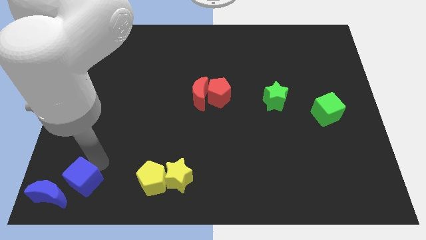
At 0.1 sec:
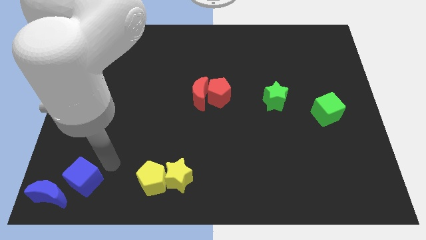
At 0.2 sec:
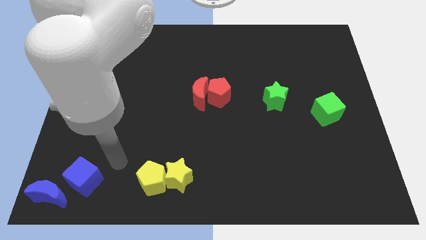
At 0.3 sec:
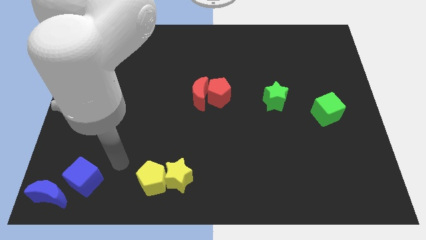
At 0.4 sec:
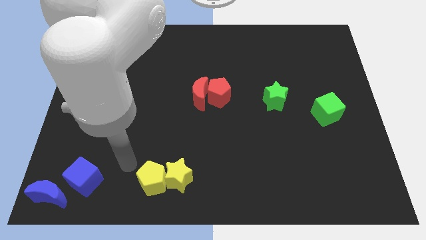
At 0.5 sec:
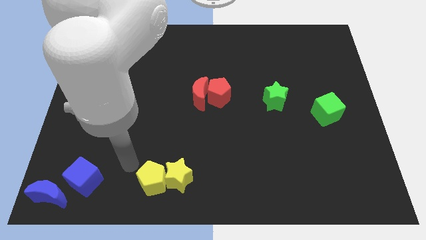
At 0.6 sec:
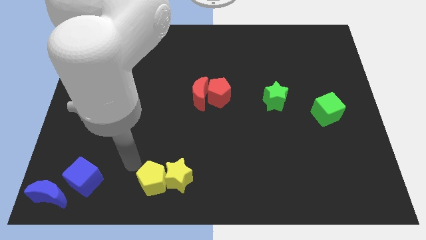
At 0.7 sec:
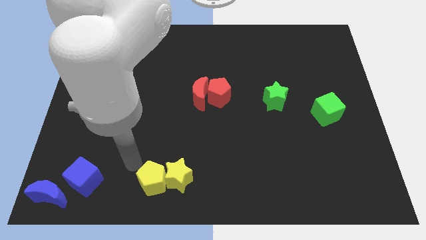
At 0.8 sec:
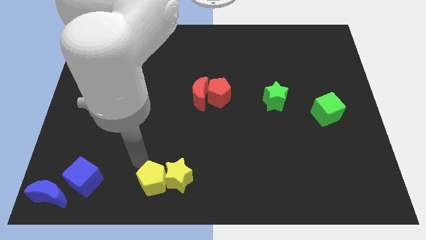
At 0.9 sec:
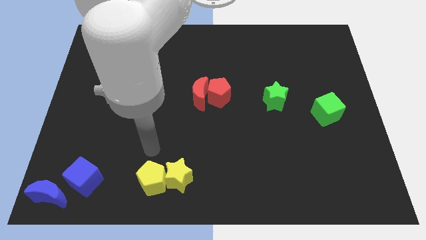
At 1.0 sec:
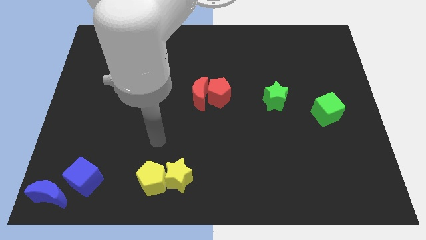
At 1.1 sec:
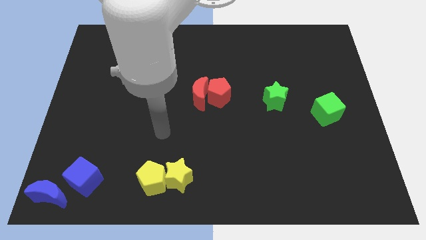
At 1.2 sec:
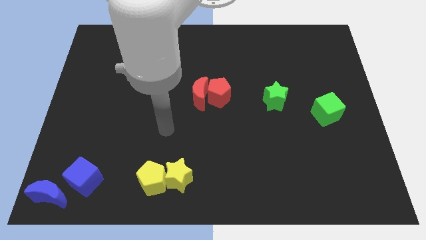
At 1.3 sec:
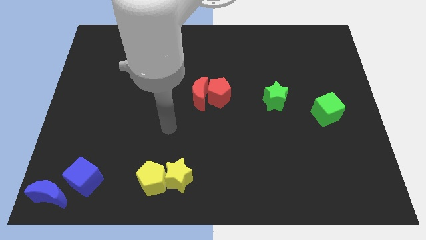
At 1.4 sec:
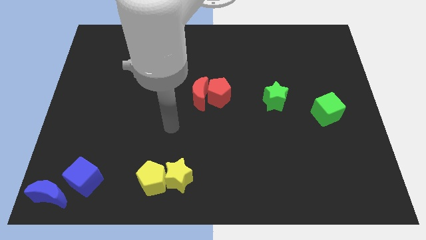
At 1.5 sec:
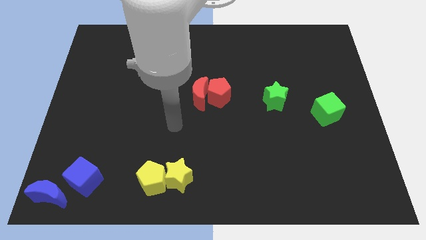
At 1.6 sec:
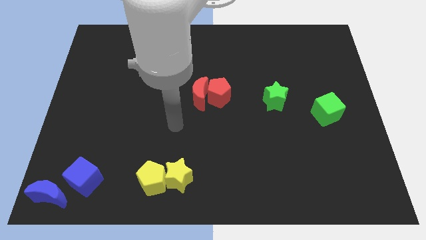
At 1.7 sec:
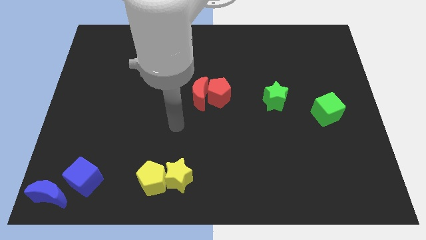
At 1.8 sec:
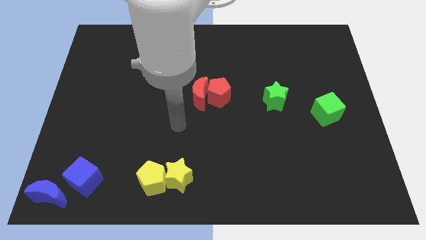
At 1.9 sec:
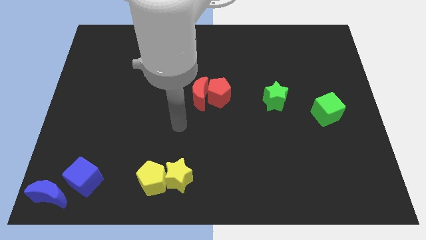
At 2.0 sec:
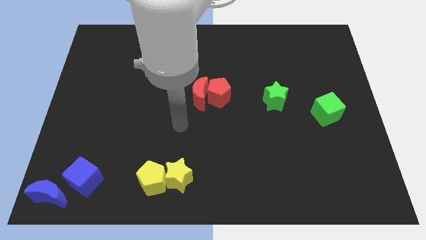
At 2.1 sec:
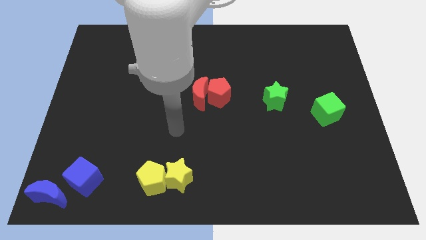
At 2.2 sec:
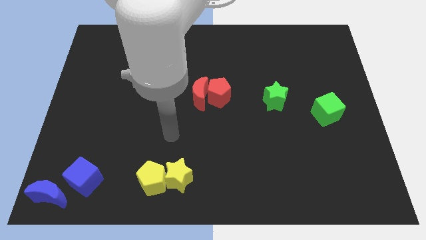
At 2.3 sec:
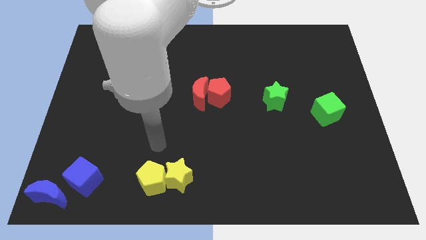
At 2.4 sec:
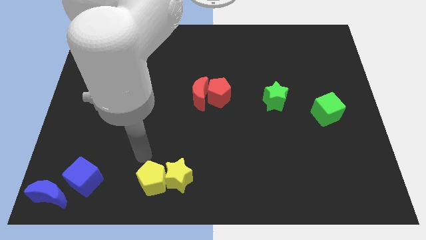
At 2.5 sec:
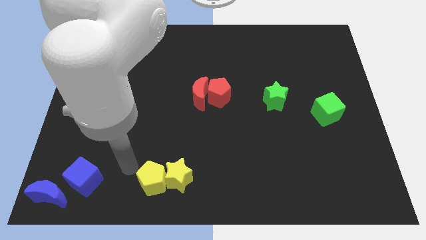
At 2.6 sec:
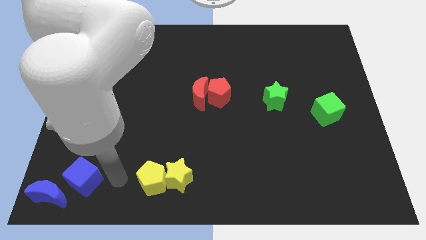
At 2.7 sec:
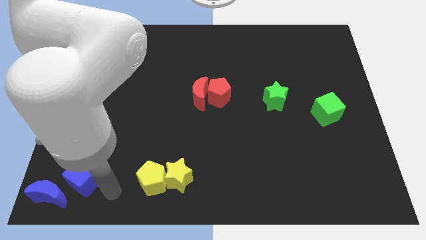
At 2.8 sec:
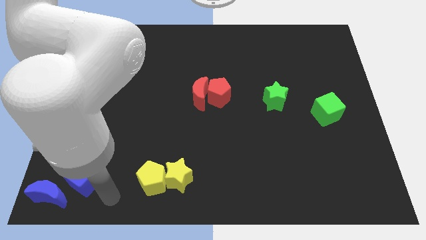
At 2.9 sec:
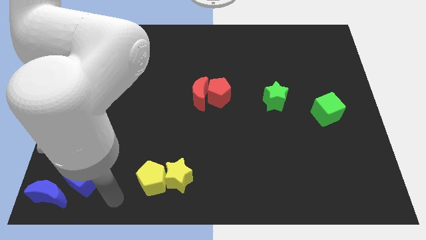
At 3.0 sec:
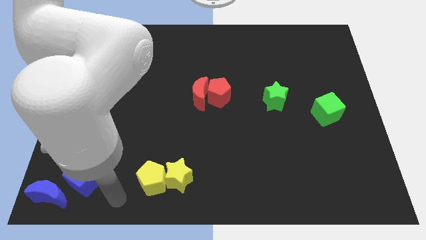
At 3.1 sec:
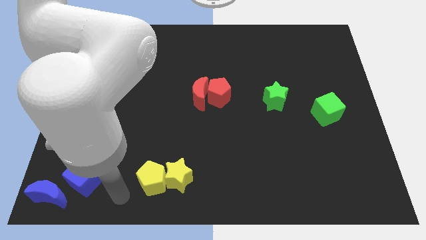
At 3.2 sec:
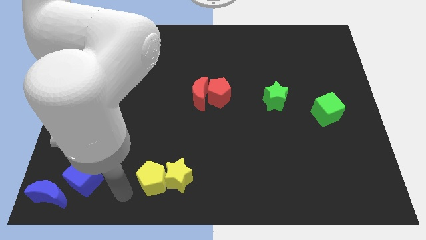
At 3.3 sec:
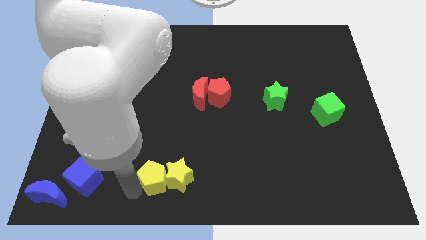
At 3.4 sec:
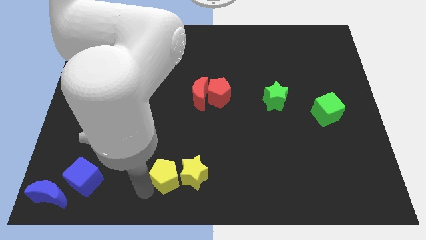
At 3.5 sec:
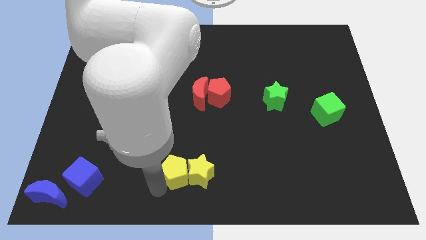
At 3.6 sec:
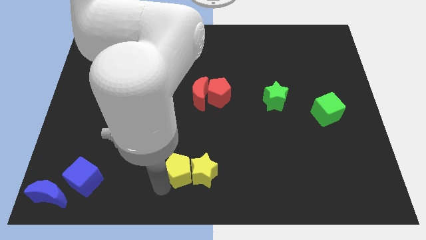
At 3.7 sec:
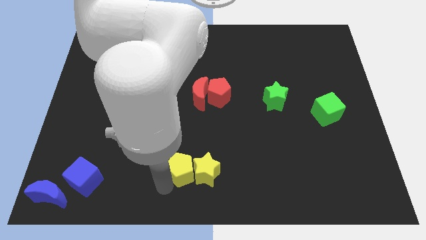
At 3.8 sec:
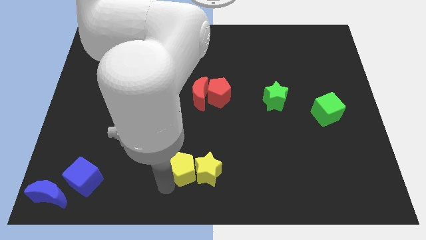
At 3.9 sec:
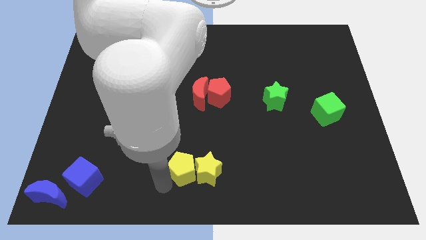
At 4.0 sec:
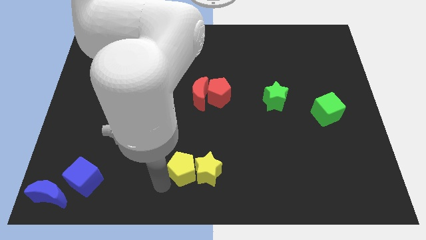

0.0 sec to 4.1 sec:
move yellow pentagon towards right along with yellow star

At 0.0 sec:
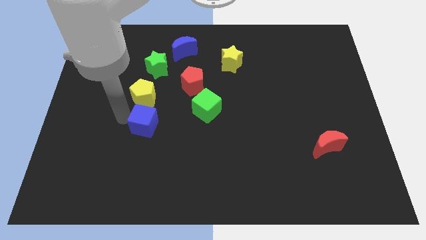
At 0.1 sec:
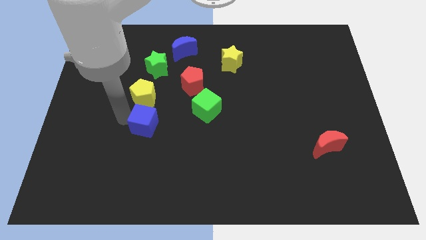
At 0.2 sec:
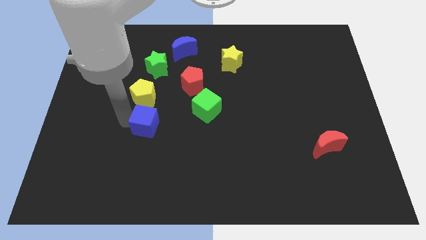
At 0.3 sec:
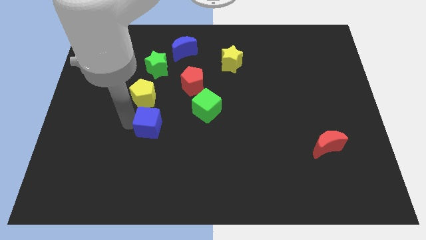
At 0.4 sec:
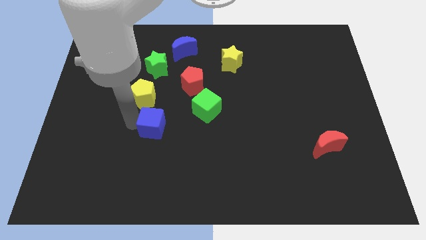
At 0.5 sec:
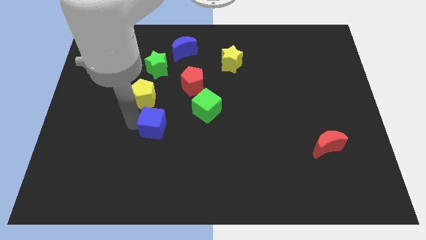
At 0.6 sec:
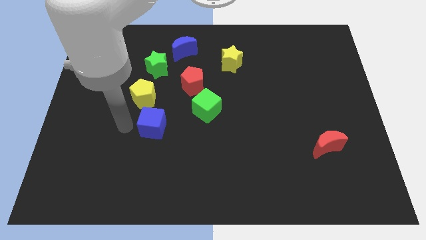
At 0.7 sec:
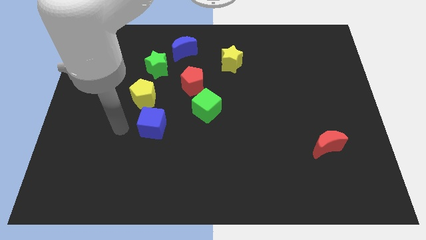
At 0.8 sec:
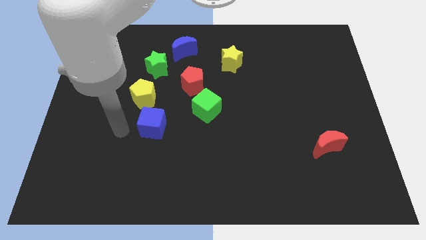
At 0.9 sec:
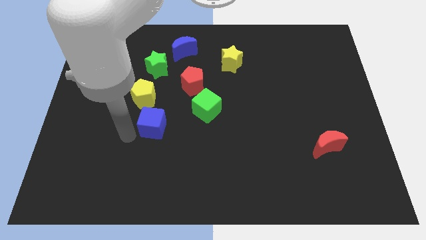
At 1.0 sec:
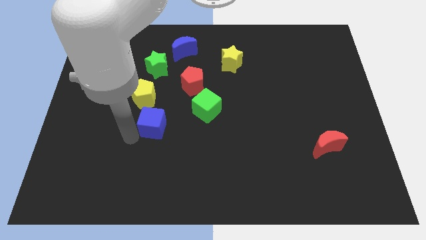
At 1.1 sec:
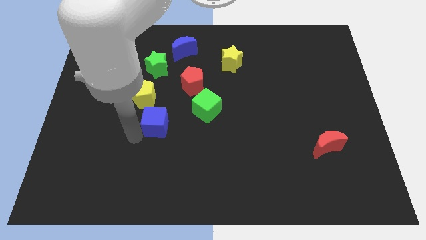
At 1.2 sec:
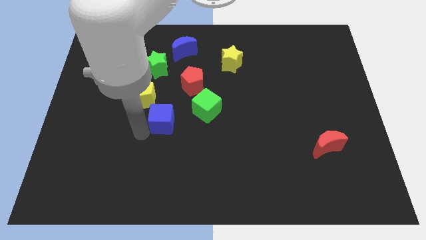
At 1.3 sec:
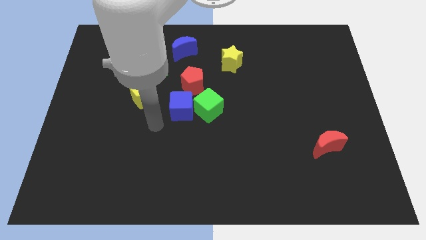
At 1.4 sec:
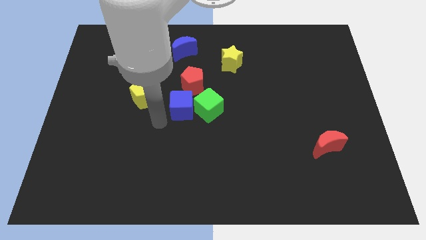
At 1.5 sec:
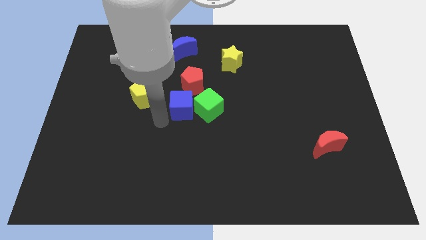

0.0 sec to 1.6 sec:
place the blue cube left to the green cube

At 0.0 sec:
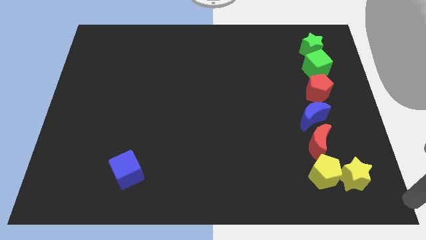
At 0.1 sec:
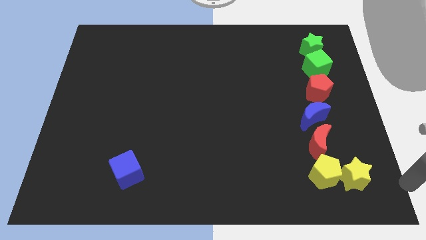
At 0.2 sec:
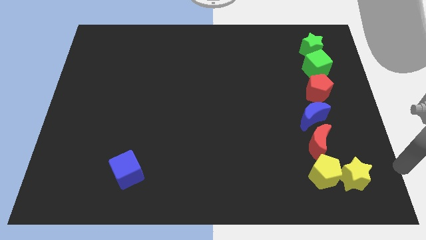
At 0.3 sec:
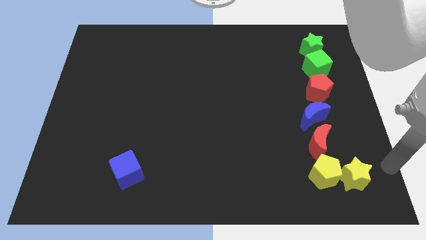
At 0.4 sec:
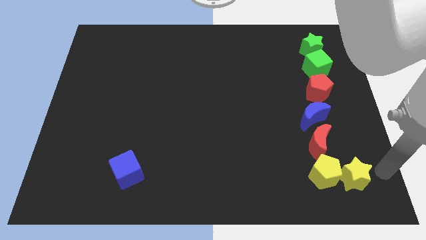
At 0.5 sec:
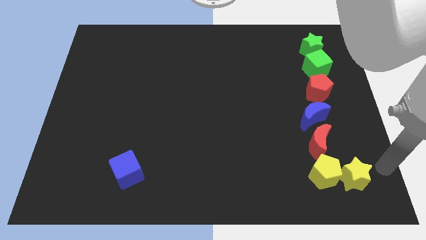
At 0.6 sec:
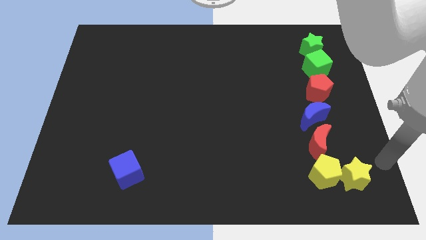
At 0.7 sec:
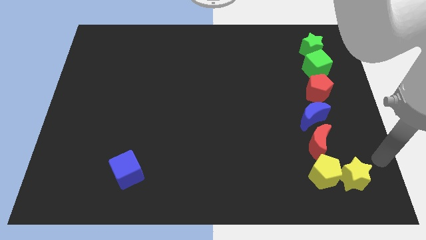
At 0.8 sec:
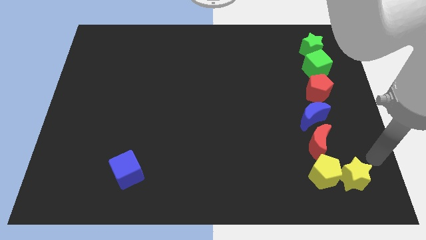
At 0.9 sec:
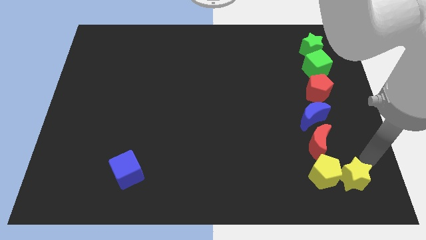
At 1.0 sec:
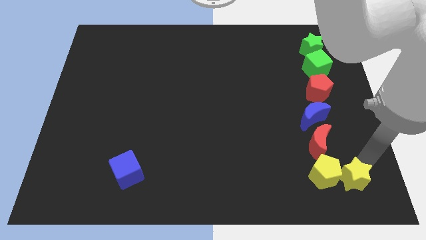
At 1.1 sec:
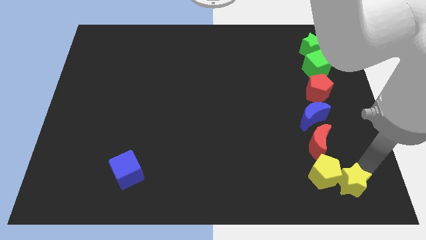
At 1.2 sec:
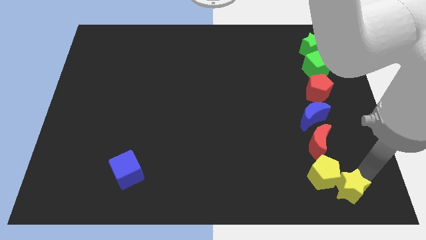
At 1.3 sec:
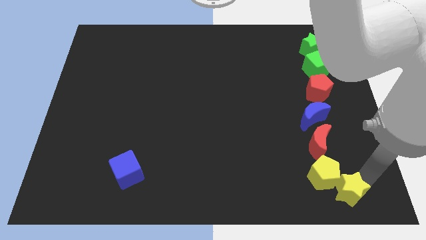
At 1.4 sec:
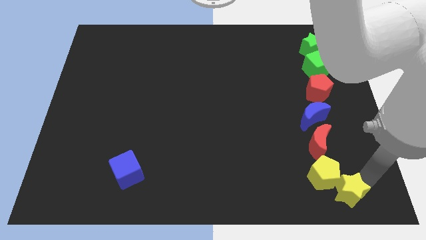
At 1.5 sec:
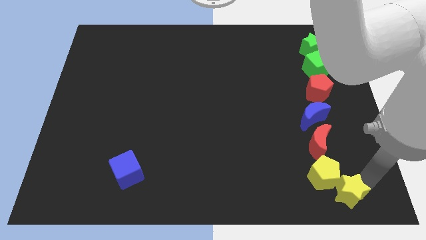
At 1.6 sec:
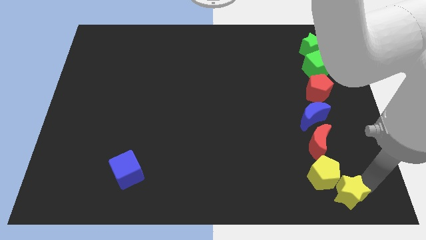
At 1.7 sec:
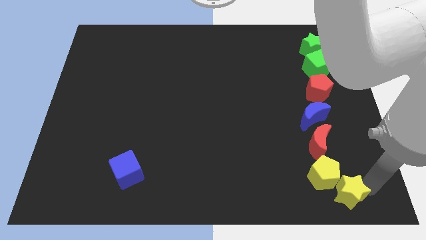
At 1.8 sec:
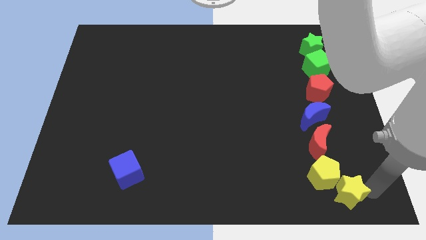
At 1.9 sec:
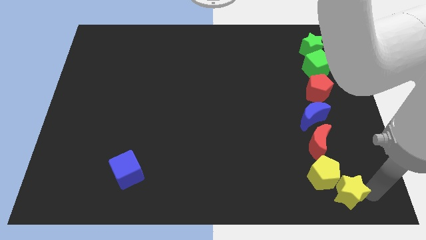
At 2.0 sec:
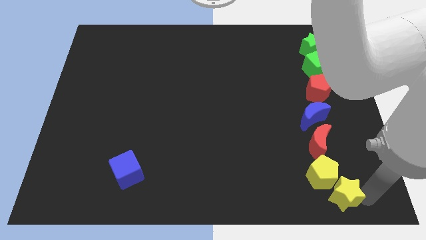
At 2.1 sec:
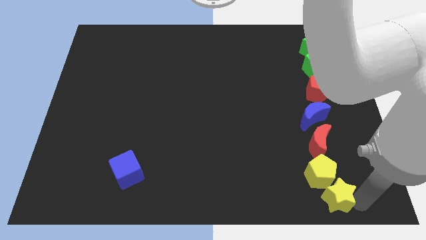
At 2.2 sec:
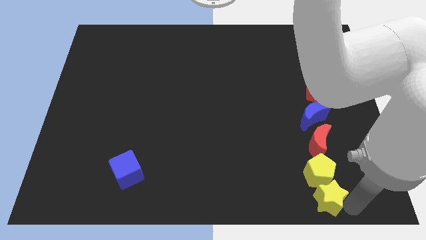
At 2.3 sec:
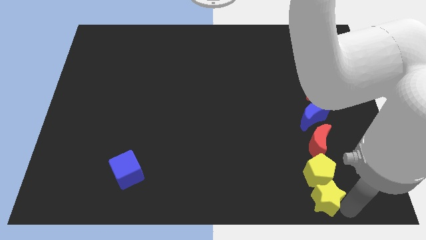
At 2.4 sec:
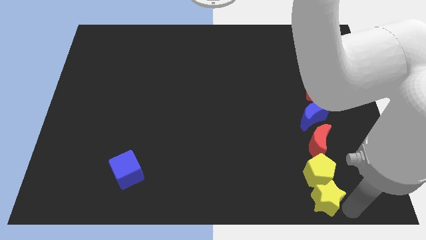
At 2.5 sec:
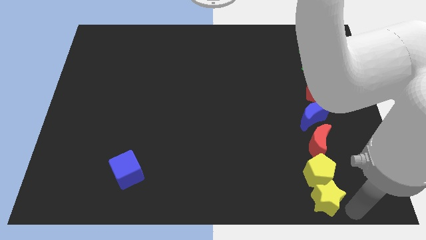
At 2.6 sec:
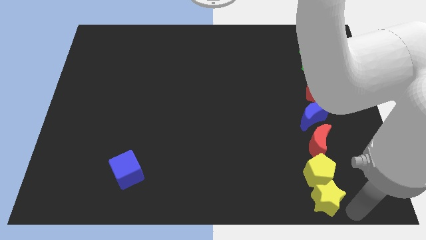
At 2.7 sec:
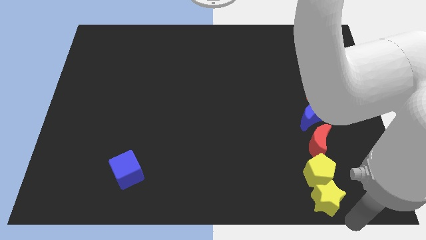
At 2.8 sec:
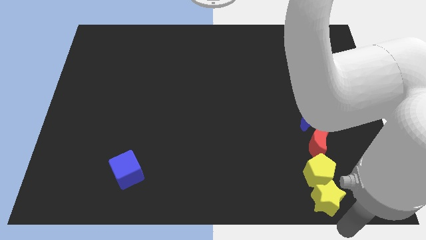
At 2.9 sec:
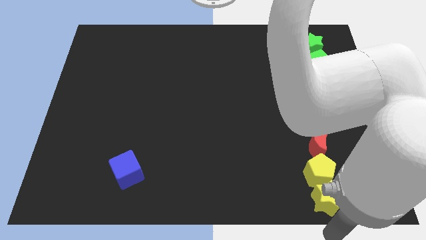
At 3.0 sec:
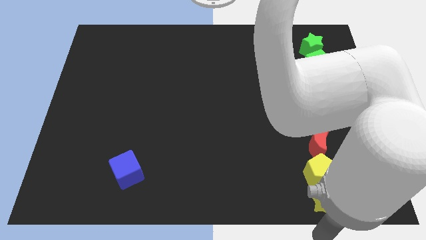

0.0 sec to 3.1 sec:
place yellow star down to the yellow pentagon

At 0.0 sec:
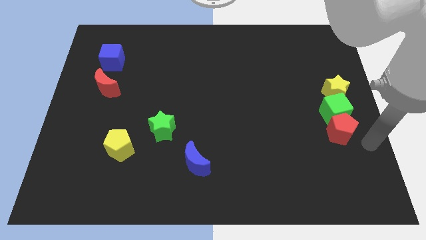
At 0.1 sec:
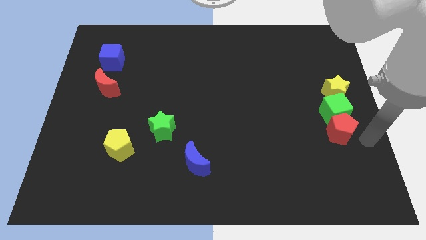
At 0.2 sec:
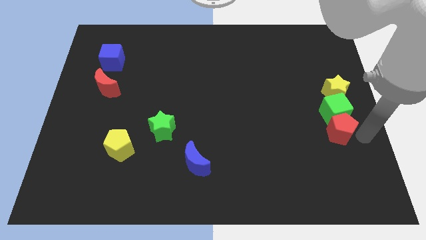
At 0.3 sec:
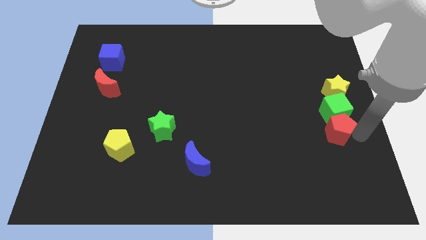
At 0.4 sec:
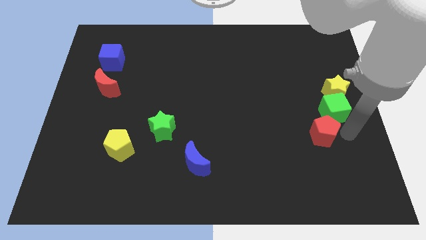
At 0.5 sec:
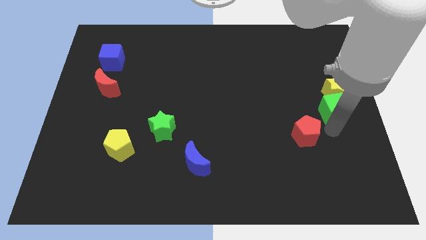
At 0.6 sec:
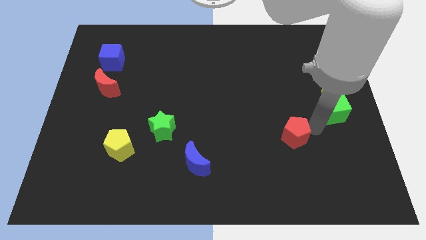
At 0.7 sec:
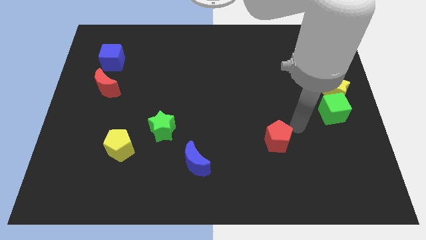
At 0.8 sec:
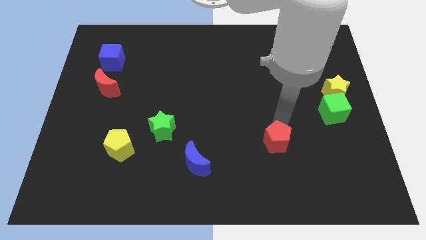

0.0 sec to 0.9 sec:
push the red pentagon towards the left side of the board
